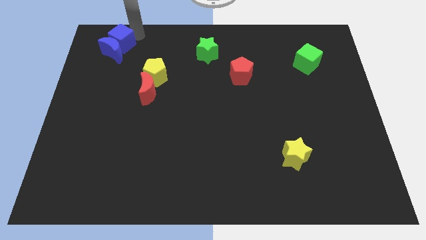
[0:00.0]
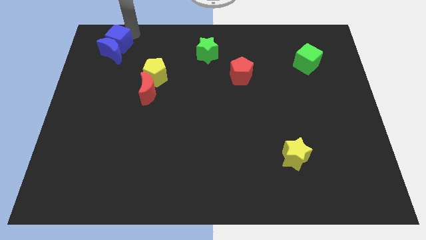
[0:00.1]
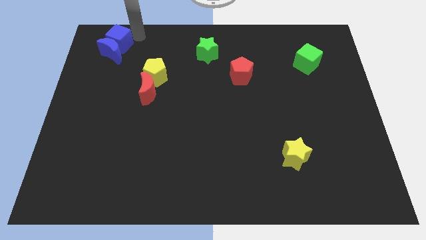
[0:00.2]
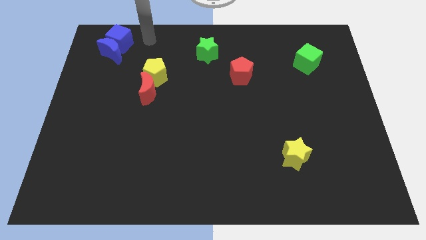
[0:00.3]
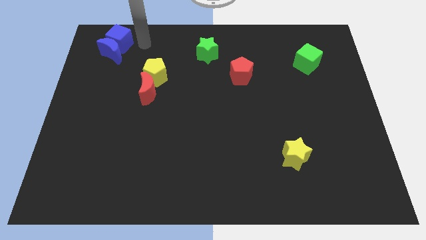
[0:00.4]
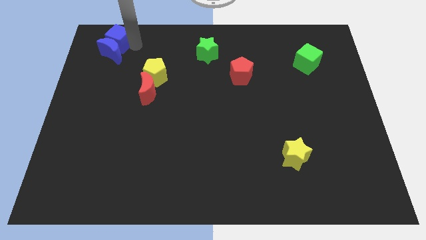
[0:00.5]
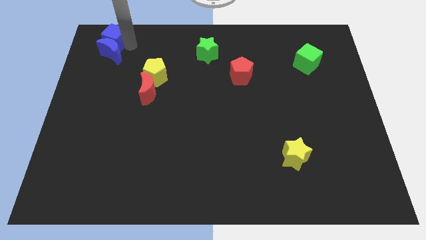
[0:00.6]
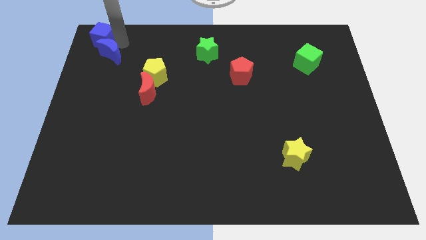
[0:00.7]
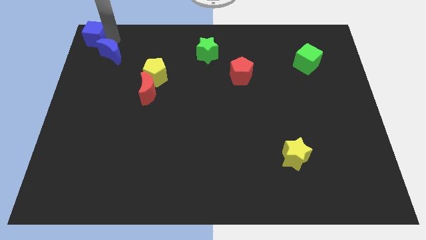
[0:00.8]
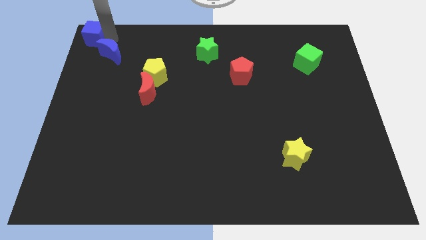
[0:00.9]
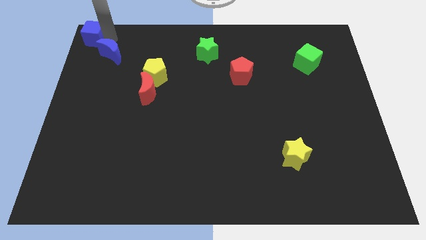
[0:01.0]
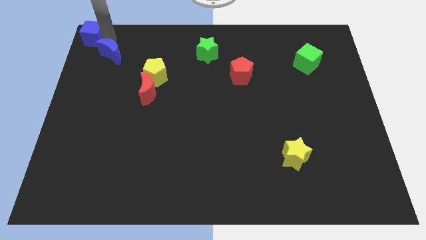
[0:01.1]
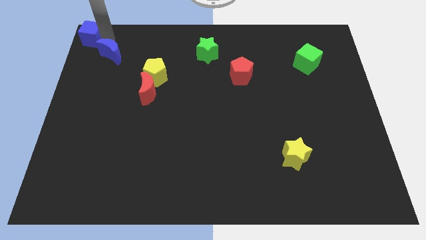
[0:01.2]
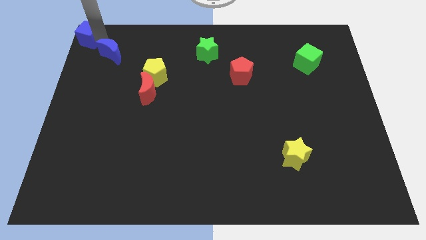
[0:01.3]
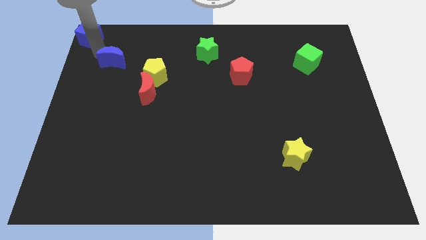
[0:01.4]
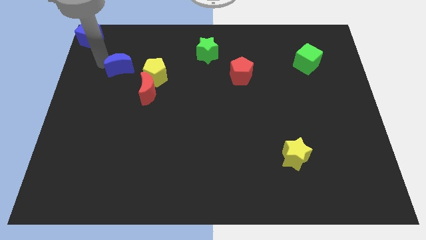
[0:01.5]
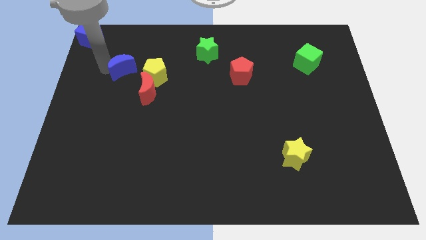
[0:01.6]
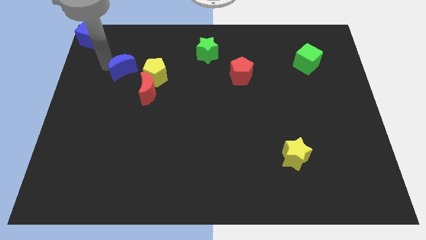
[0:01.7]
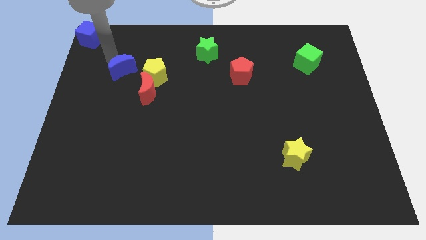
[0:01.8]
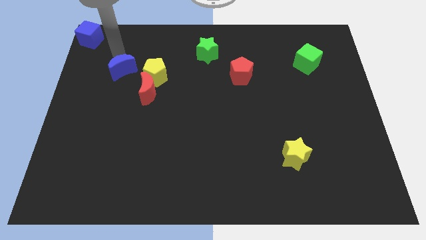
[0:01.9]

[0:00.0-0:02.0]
put the blue cube at the top left corner

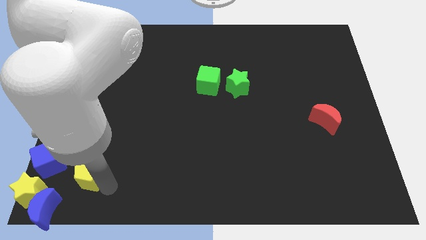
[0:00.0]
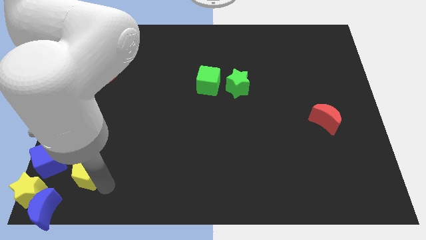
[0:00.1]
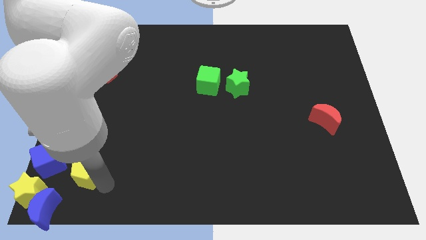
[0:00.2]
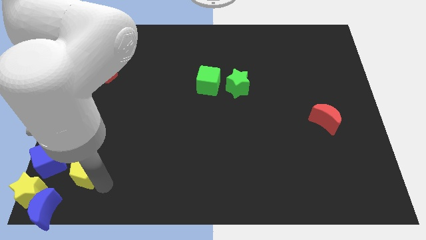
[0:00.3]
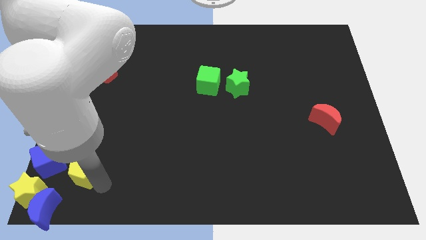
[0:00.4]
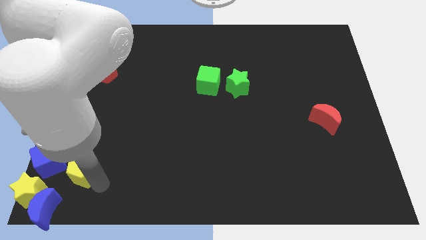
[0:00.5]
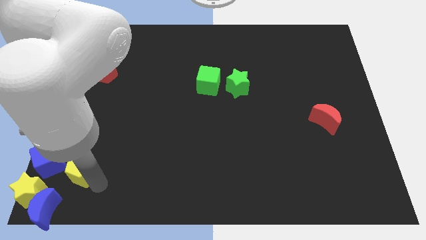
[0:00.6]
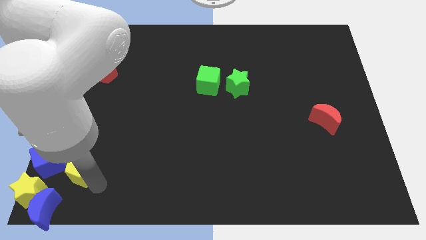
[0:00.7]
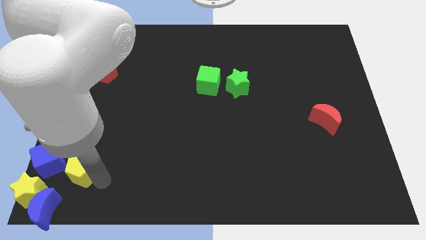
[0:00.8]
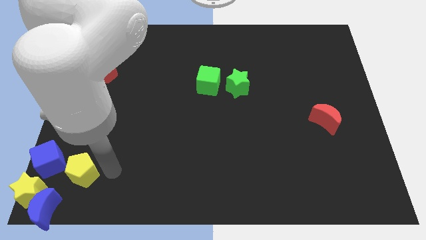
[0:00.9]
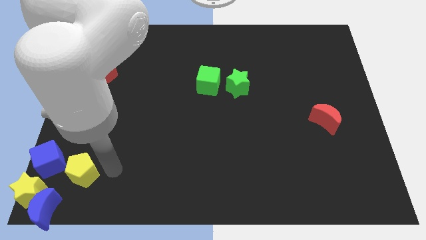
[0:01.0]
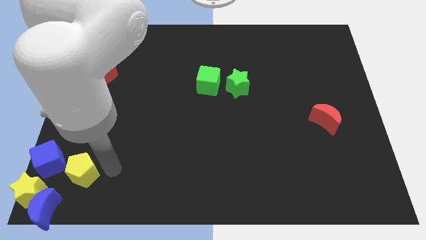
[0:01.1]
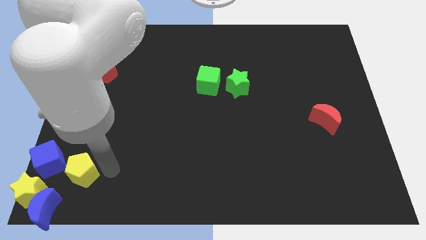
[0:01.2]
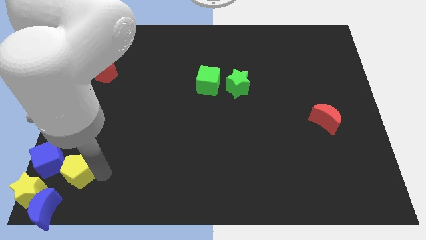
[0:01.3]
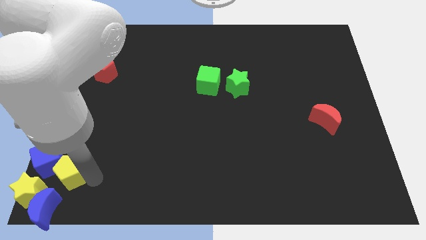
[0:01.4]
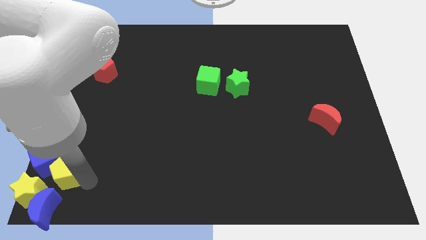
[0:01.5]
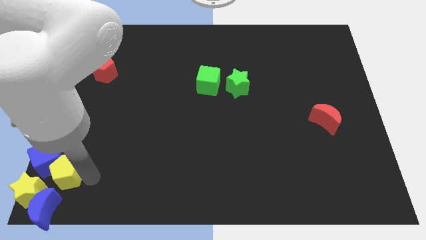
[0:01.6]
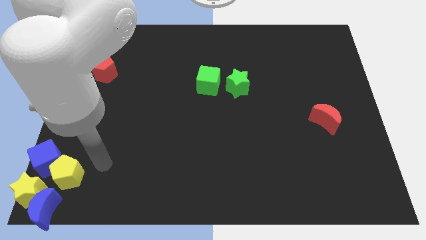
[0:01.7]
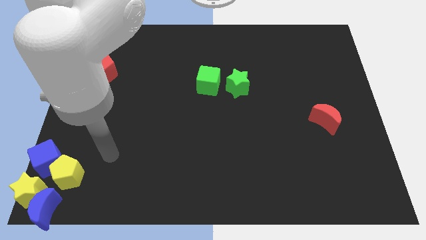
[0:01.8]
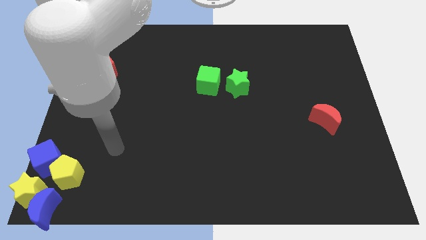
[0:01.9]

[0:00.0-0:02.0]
push the yellow pentagon into the blue cube

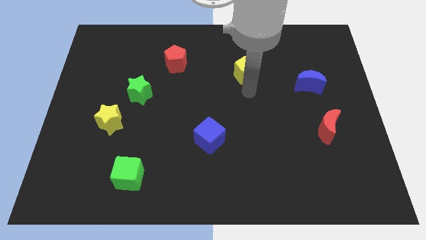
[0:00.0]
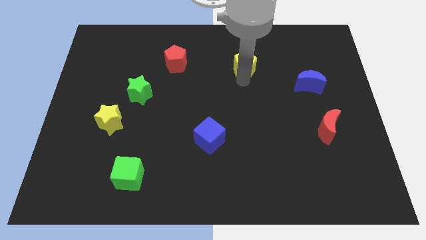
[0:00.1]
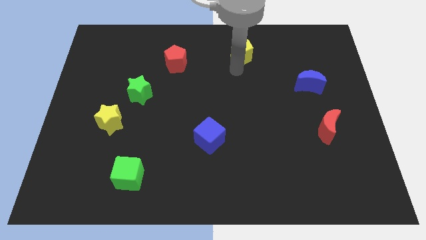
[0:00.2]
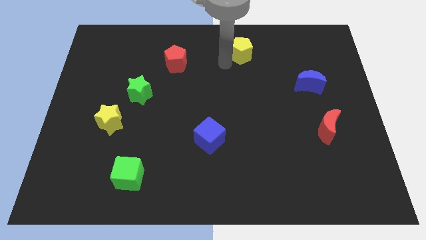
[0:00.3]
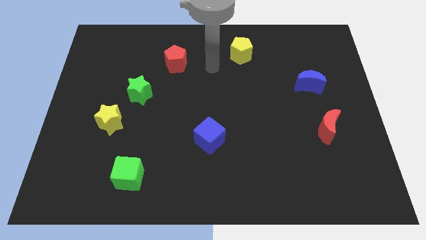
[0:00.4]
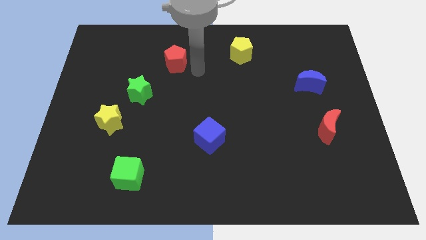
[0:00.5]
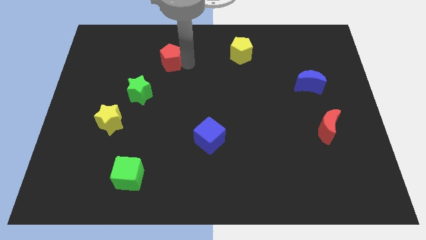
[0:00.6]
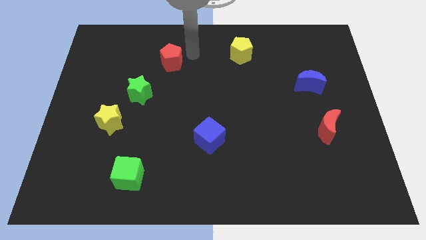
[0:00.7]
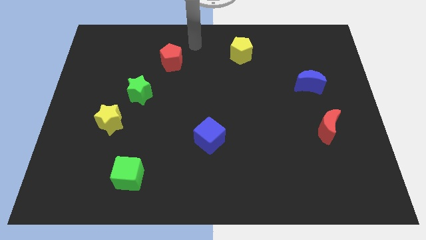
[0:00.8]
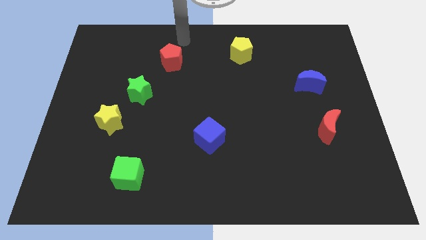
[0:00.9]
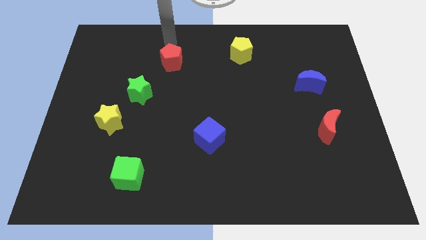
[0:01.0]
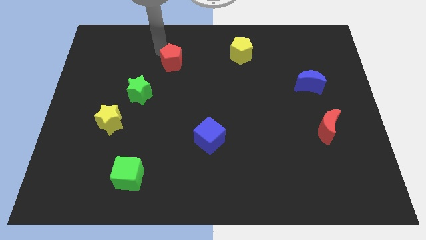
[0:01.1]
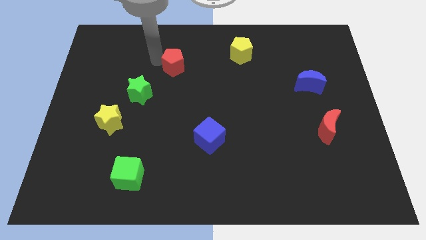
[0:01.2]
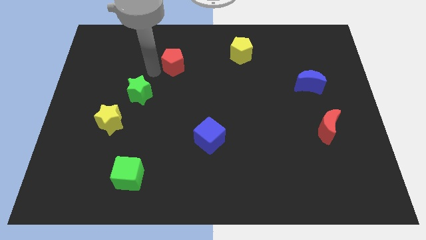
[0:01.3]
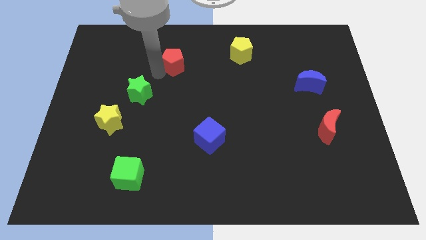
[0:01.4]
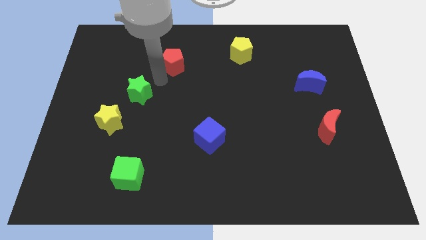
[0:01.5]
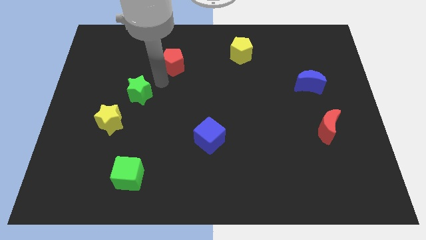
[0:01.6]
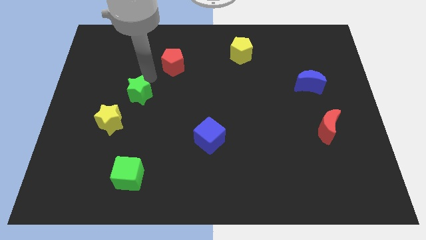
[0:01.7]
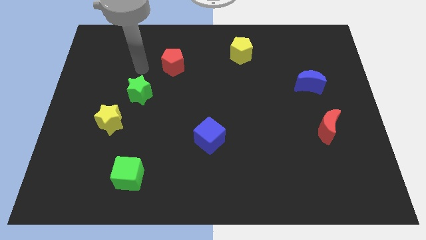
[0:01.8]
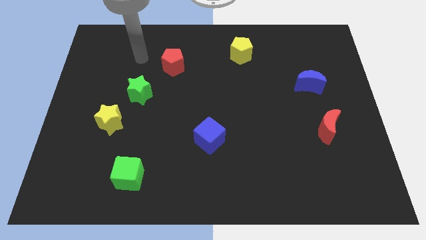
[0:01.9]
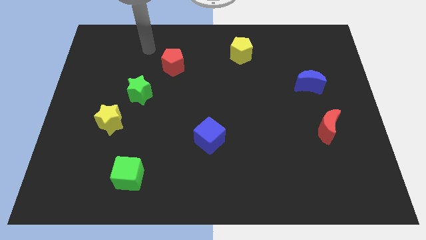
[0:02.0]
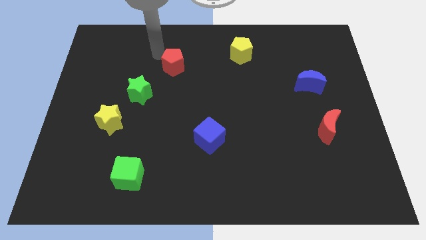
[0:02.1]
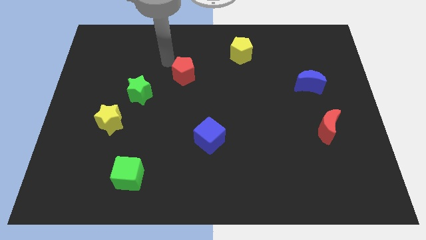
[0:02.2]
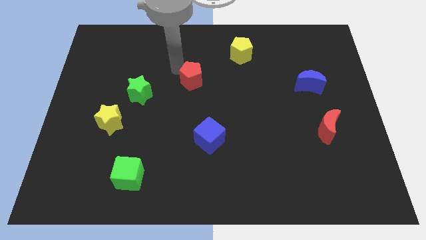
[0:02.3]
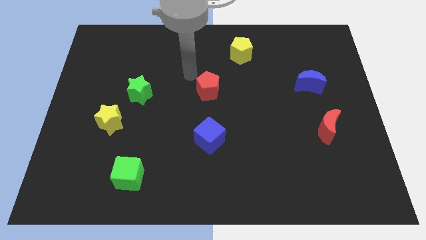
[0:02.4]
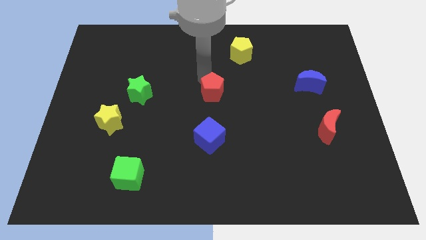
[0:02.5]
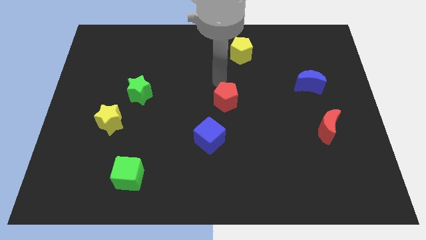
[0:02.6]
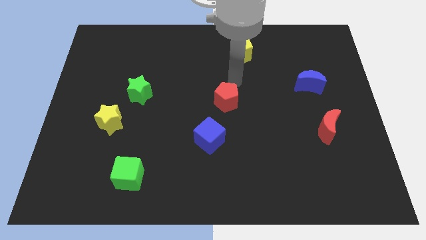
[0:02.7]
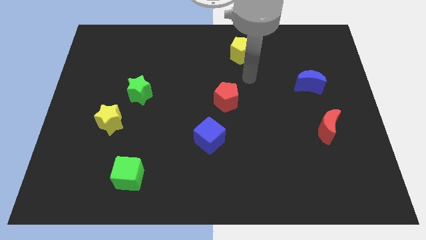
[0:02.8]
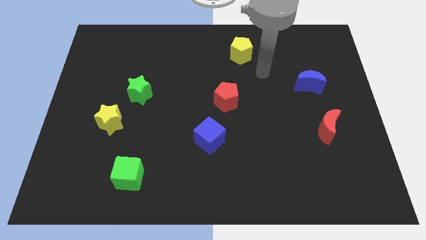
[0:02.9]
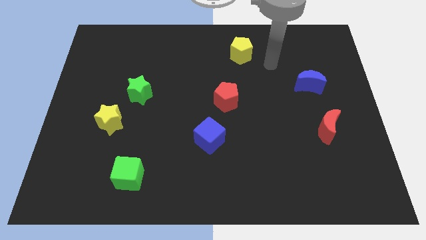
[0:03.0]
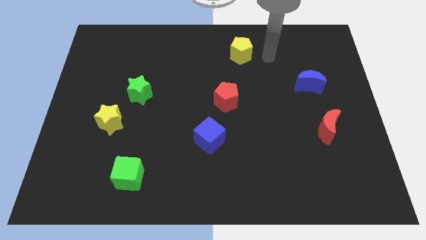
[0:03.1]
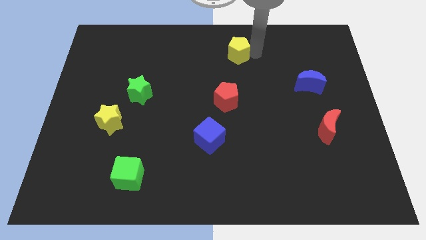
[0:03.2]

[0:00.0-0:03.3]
move the red pentagon to the center of the board

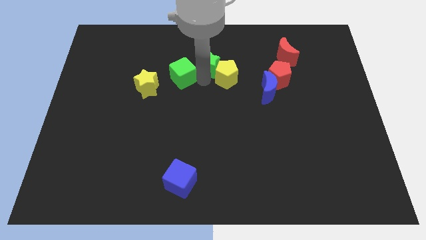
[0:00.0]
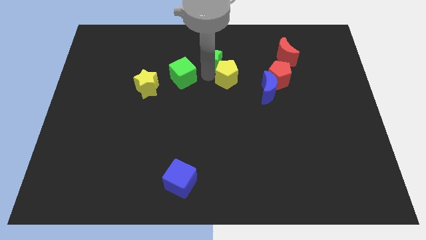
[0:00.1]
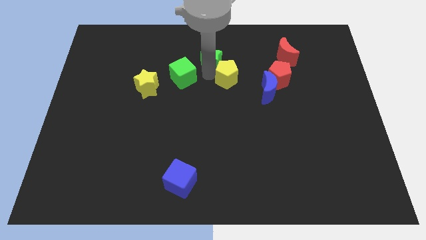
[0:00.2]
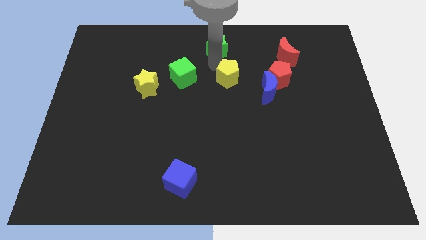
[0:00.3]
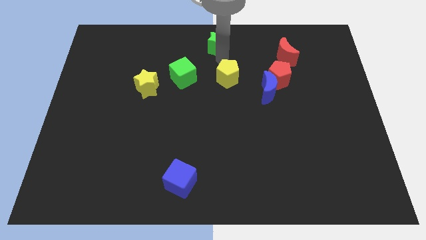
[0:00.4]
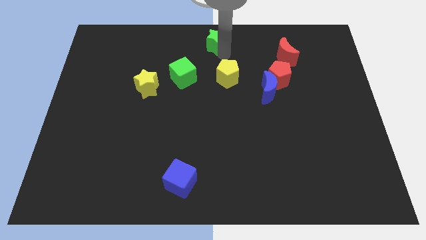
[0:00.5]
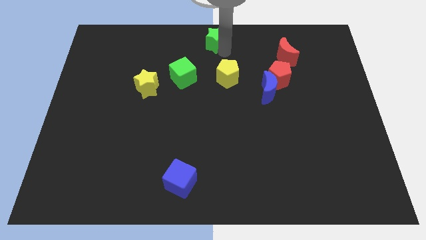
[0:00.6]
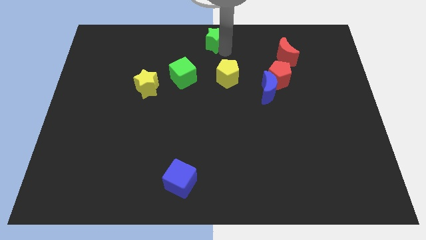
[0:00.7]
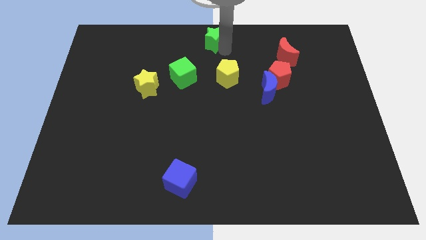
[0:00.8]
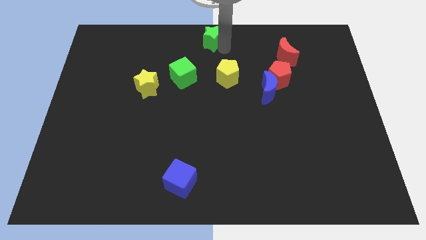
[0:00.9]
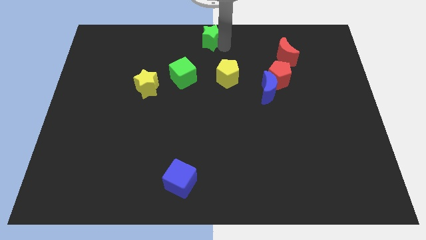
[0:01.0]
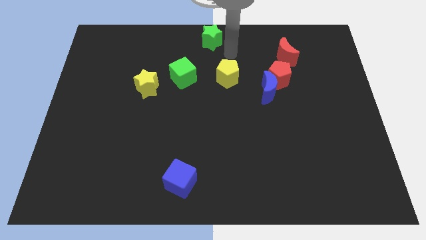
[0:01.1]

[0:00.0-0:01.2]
place the green star at the top center

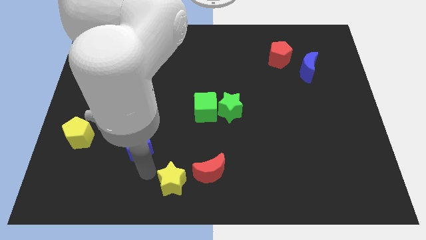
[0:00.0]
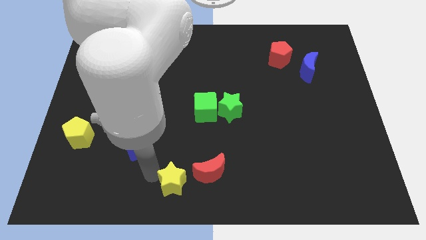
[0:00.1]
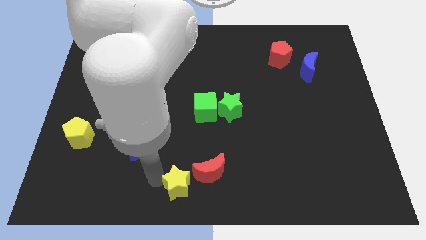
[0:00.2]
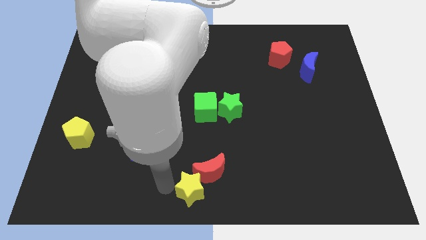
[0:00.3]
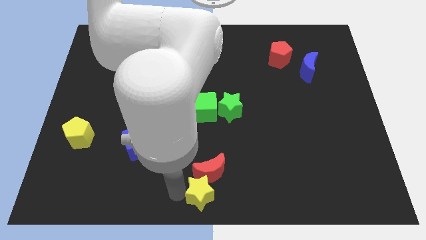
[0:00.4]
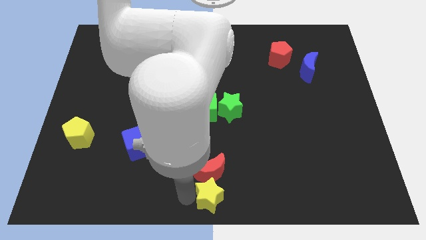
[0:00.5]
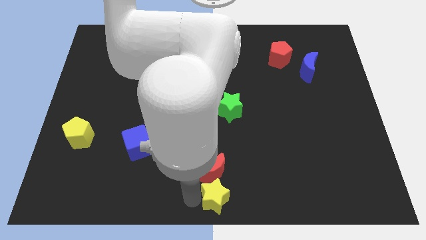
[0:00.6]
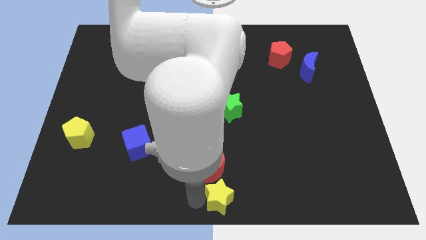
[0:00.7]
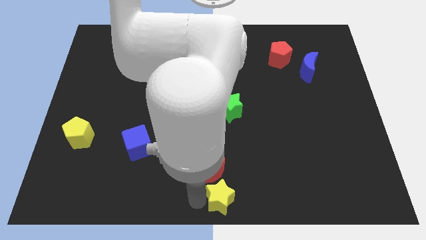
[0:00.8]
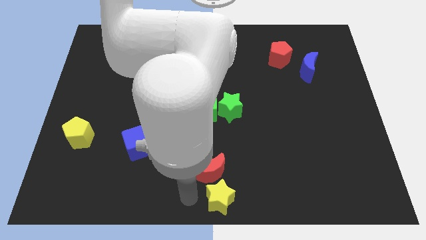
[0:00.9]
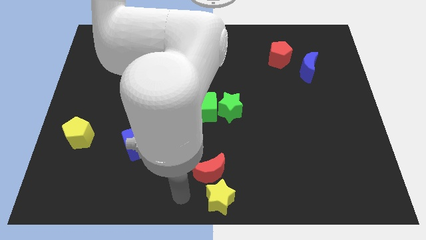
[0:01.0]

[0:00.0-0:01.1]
place the yellow star below the red moon
